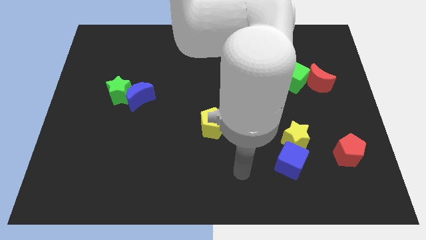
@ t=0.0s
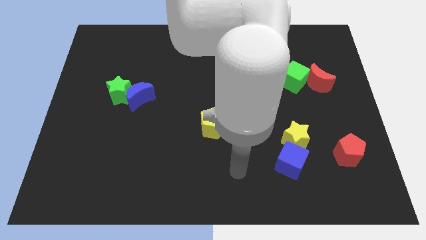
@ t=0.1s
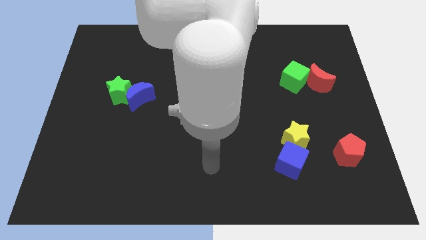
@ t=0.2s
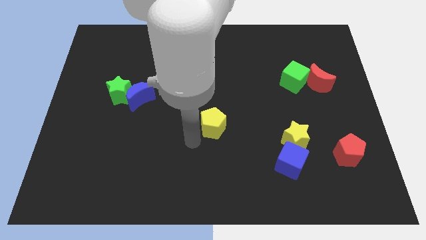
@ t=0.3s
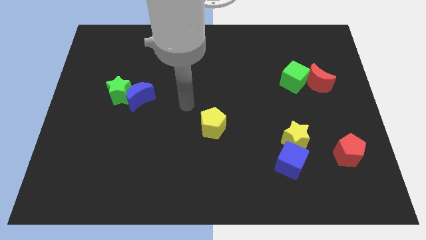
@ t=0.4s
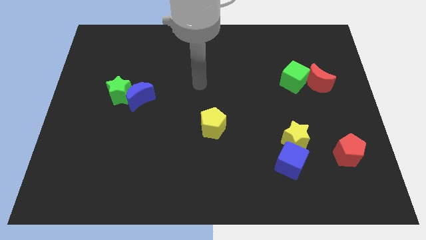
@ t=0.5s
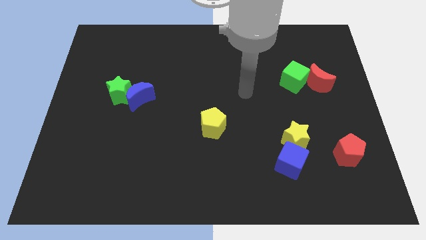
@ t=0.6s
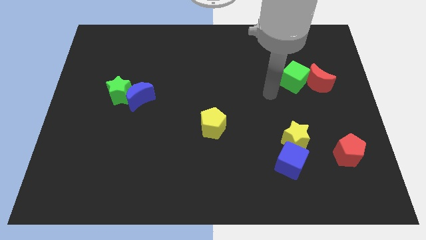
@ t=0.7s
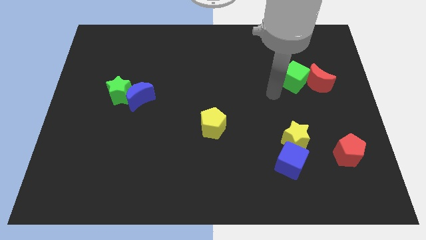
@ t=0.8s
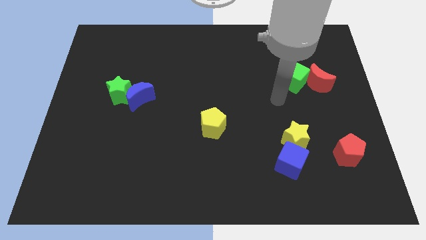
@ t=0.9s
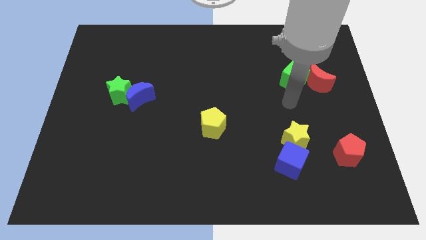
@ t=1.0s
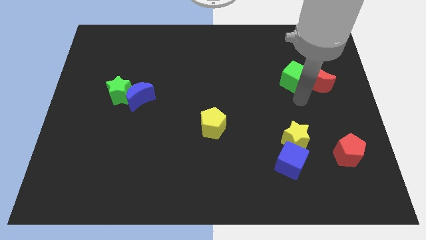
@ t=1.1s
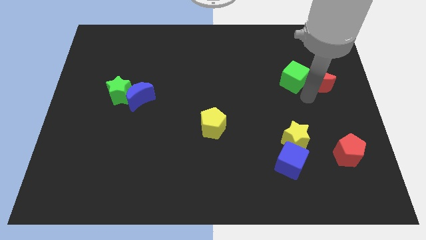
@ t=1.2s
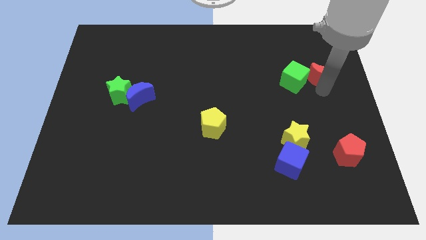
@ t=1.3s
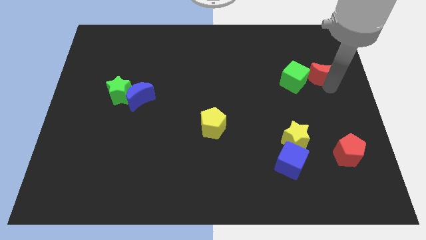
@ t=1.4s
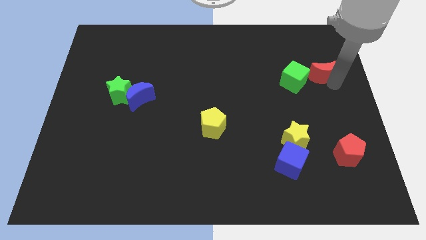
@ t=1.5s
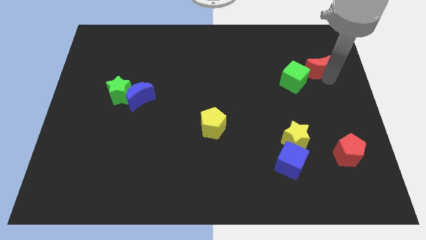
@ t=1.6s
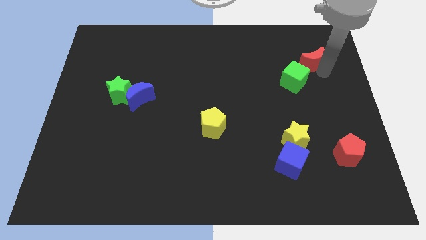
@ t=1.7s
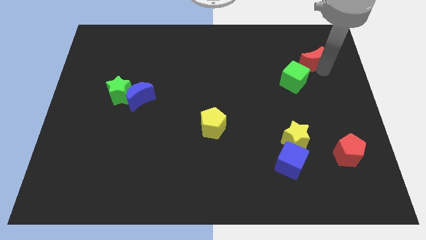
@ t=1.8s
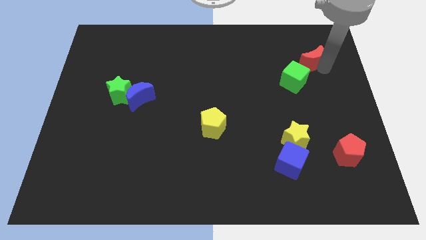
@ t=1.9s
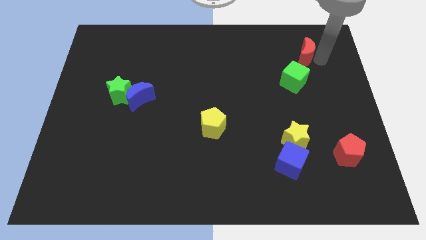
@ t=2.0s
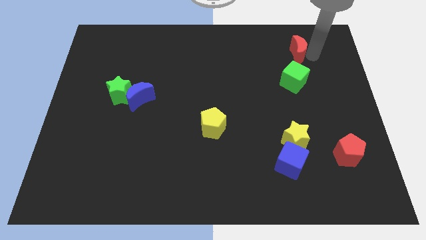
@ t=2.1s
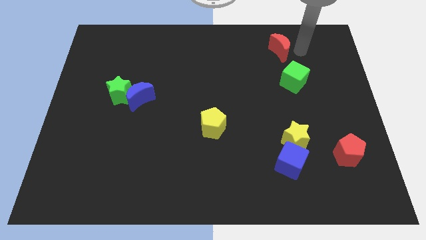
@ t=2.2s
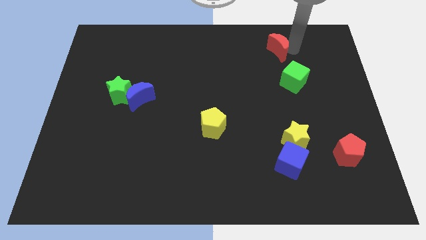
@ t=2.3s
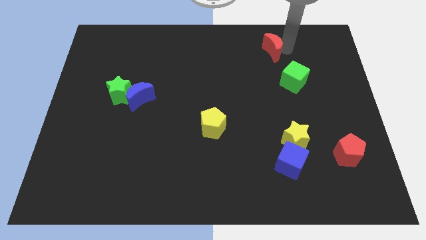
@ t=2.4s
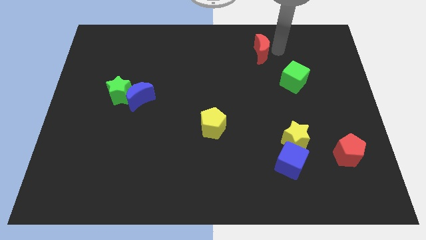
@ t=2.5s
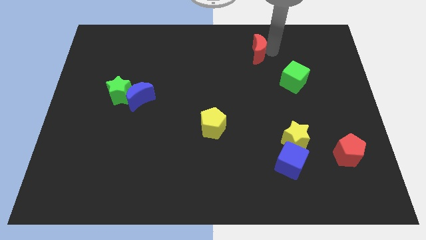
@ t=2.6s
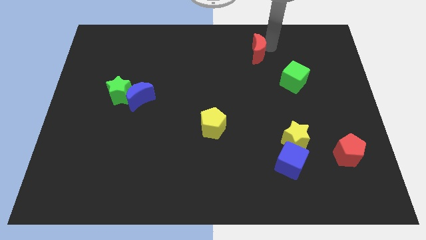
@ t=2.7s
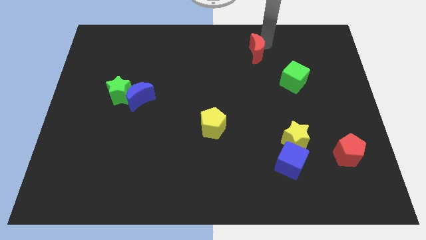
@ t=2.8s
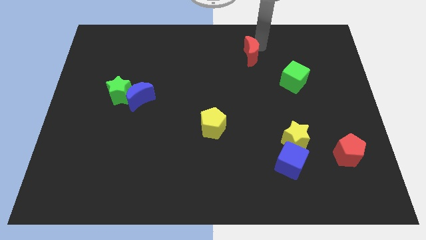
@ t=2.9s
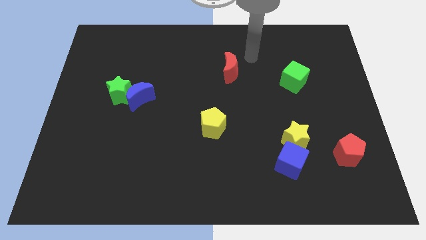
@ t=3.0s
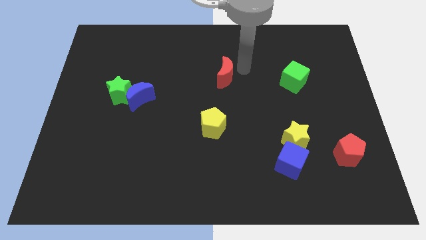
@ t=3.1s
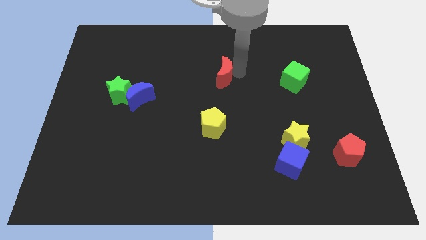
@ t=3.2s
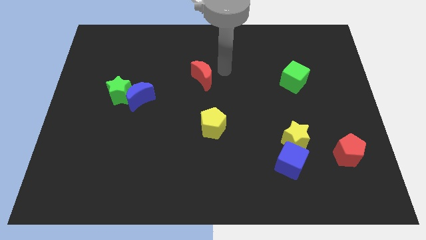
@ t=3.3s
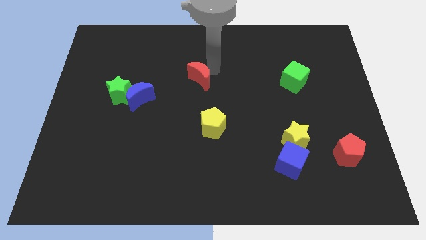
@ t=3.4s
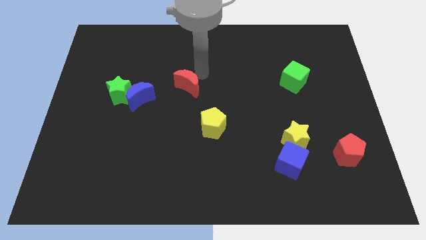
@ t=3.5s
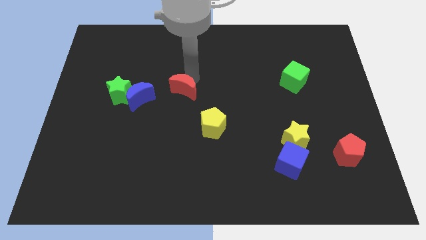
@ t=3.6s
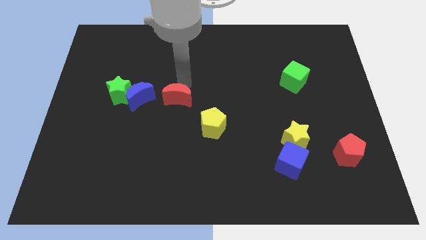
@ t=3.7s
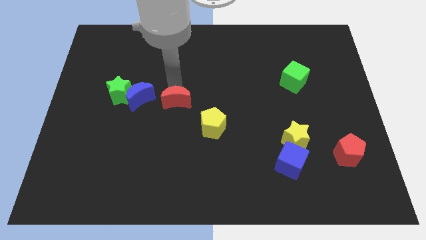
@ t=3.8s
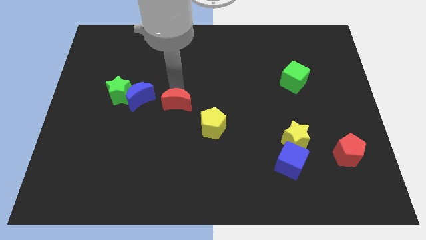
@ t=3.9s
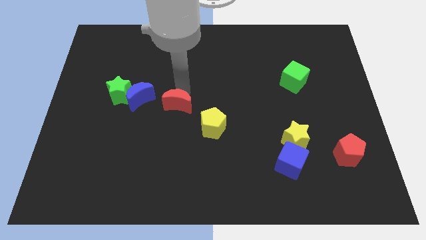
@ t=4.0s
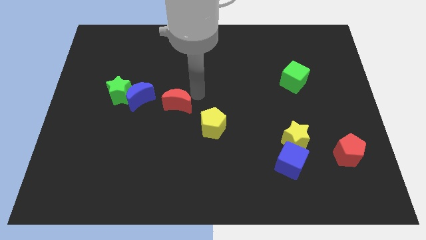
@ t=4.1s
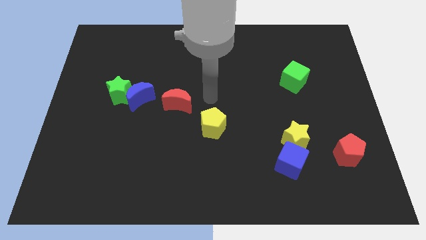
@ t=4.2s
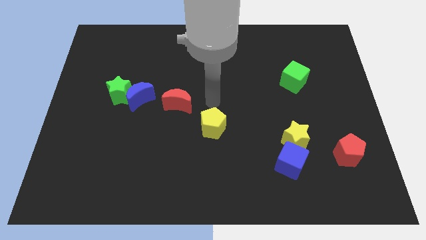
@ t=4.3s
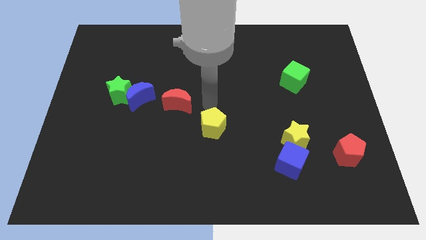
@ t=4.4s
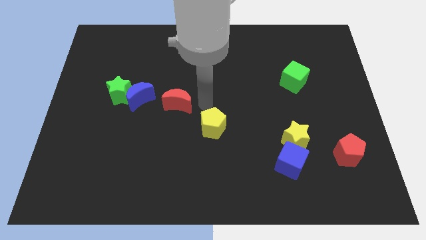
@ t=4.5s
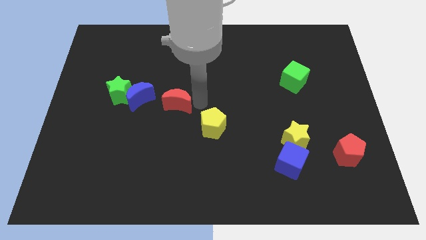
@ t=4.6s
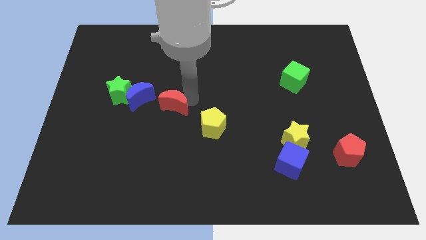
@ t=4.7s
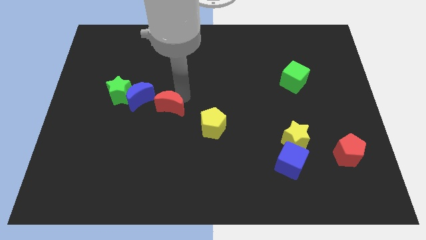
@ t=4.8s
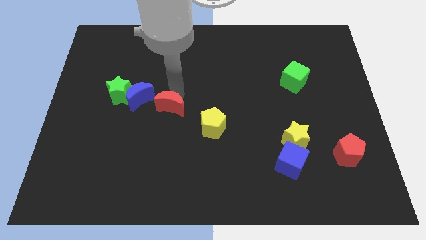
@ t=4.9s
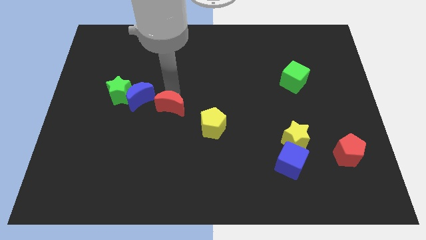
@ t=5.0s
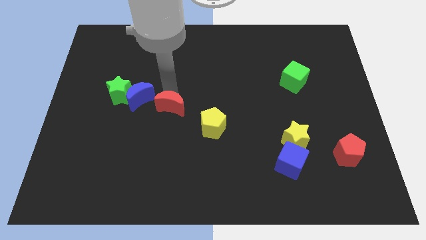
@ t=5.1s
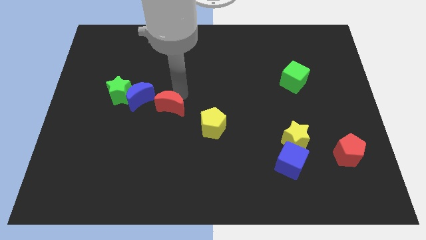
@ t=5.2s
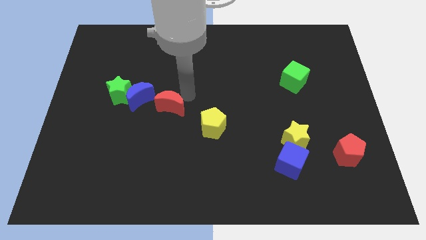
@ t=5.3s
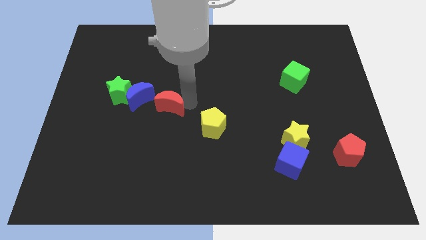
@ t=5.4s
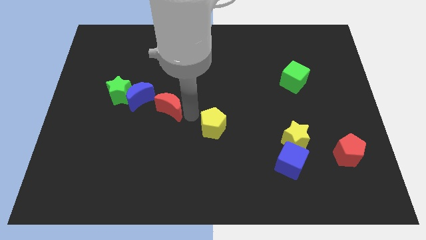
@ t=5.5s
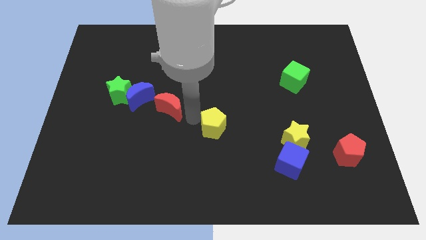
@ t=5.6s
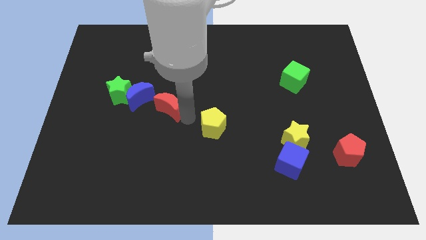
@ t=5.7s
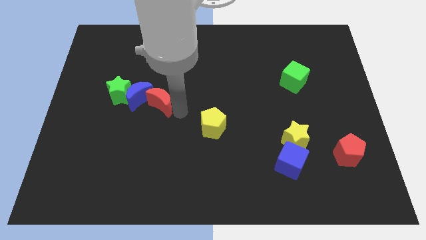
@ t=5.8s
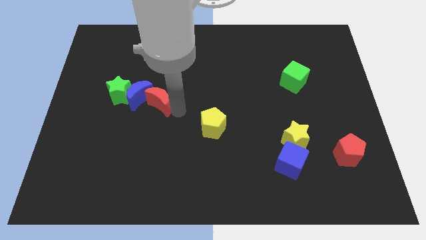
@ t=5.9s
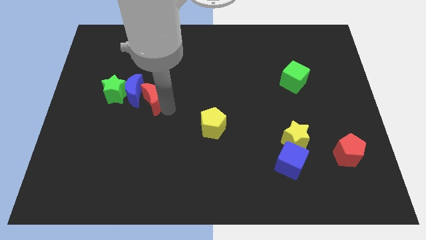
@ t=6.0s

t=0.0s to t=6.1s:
move the red moon towards the blue moon

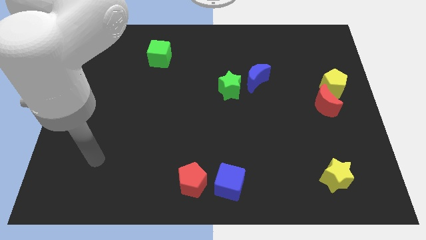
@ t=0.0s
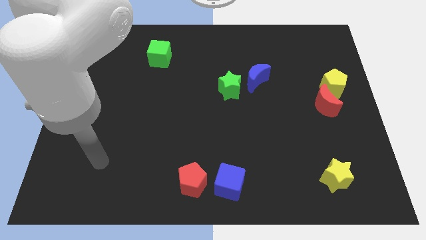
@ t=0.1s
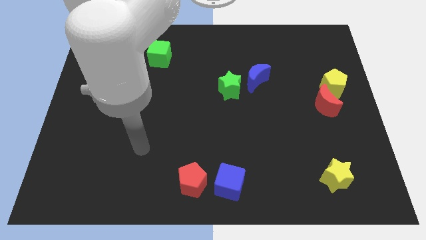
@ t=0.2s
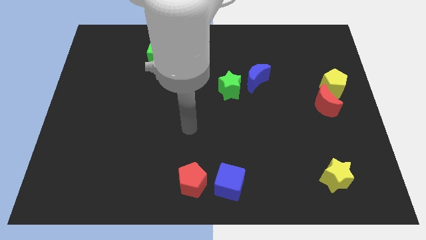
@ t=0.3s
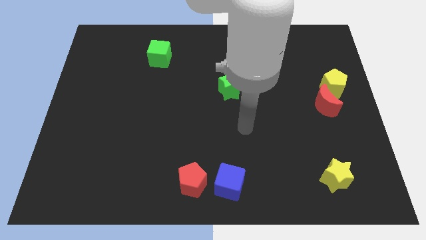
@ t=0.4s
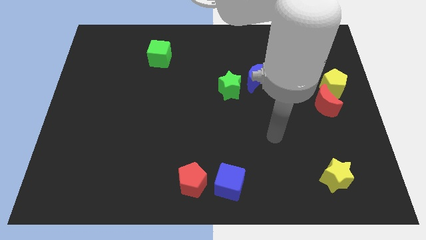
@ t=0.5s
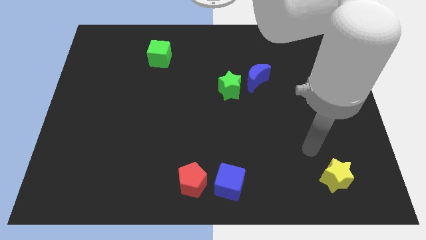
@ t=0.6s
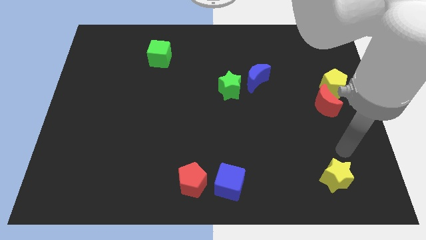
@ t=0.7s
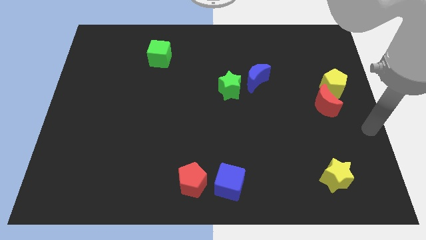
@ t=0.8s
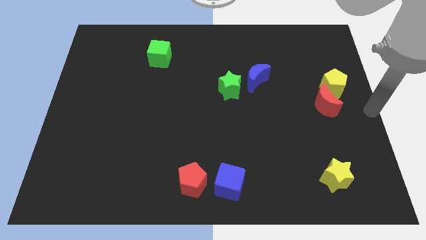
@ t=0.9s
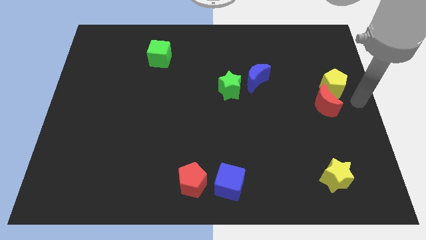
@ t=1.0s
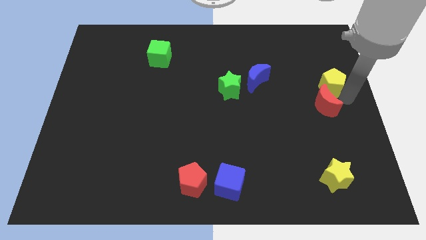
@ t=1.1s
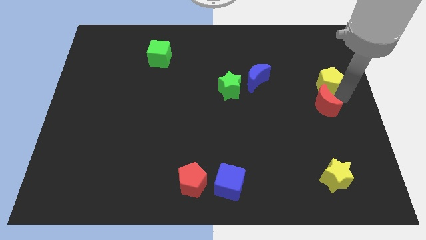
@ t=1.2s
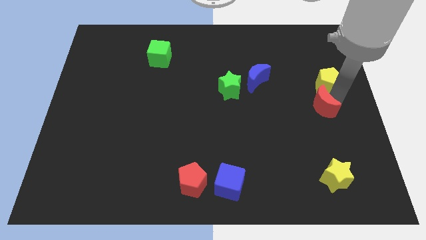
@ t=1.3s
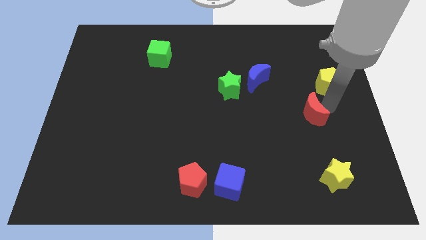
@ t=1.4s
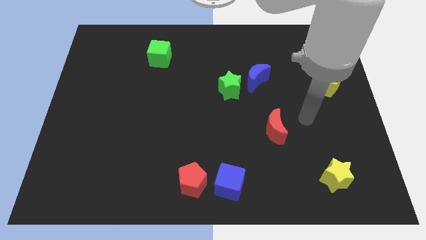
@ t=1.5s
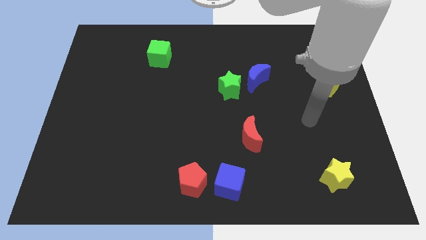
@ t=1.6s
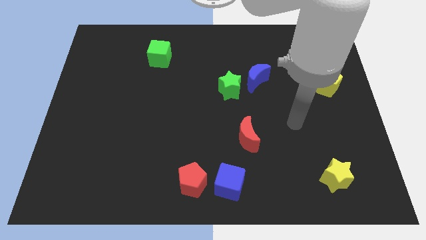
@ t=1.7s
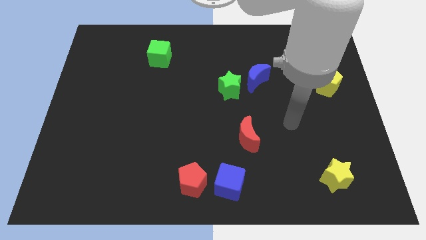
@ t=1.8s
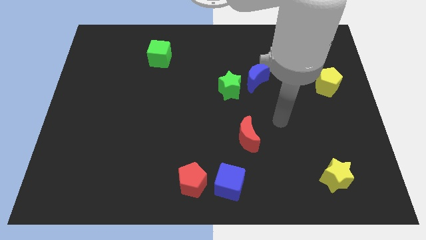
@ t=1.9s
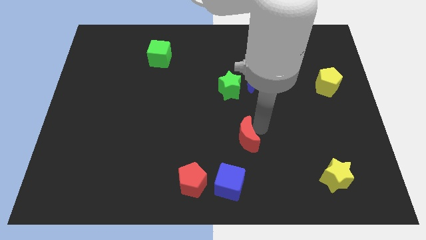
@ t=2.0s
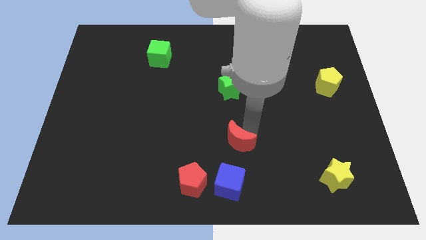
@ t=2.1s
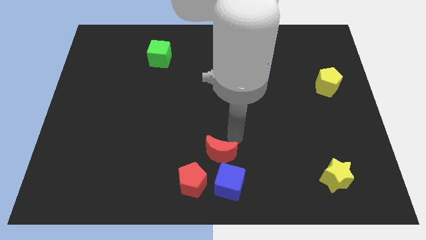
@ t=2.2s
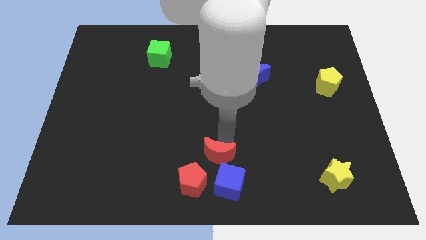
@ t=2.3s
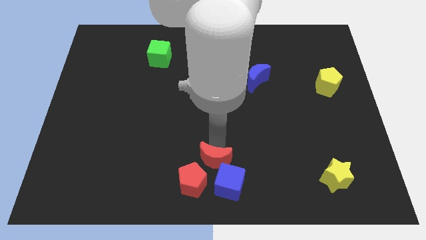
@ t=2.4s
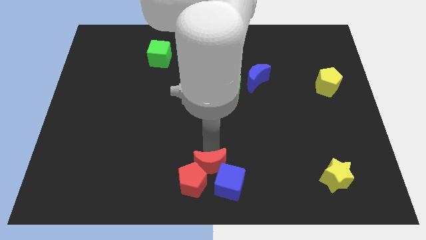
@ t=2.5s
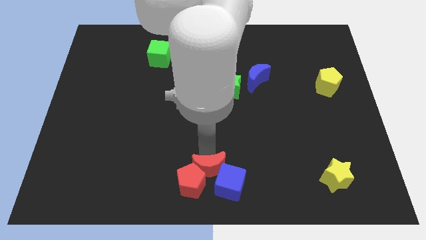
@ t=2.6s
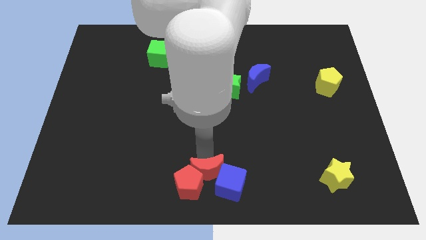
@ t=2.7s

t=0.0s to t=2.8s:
move the red moon next to the red pentagon
